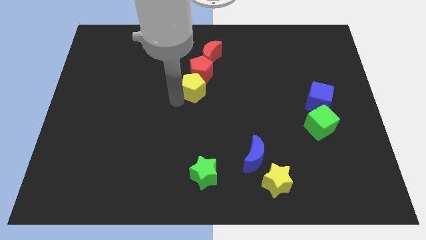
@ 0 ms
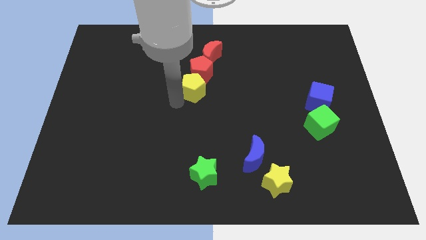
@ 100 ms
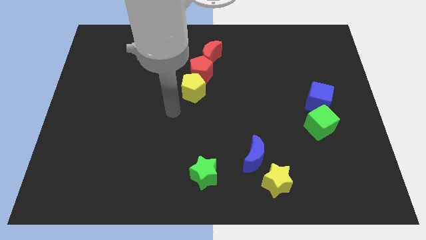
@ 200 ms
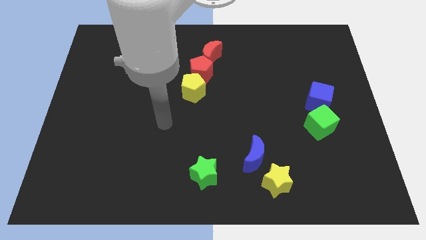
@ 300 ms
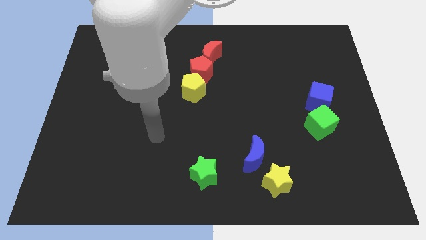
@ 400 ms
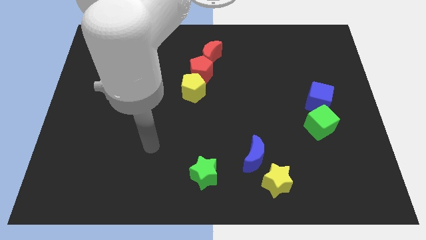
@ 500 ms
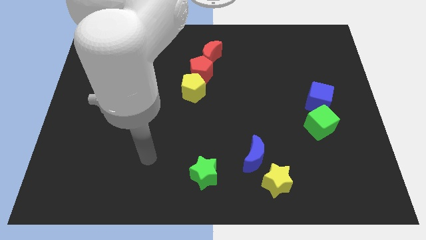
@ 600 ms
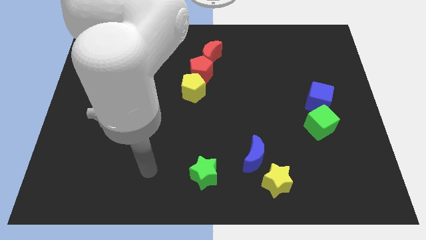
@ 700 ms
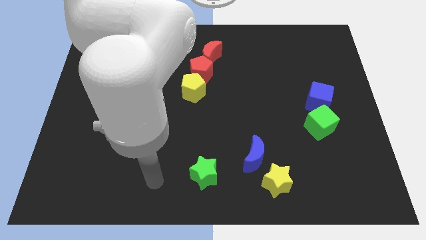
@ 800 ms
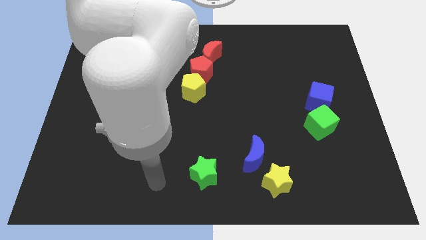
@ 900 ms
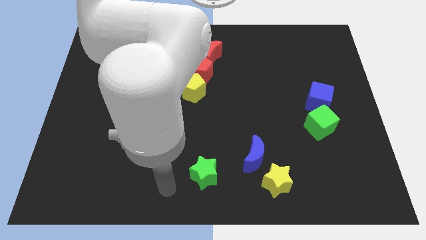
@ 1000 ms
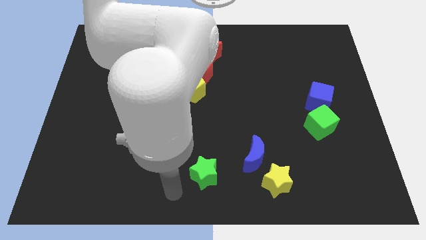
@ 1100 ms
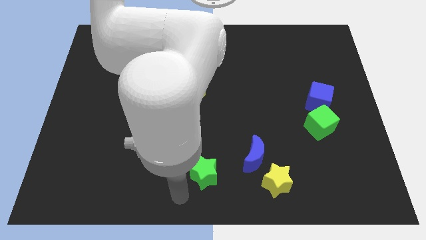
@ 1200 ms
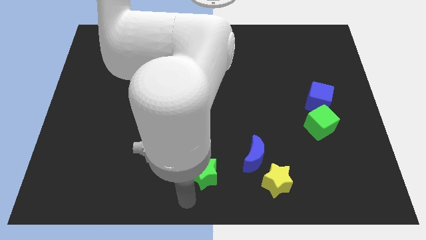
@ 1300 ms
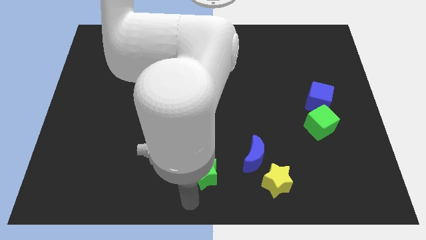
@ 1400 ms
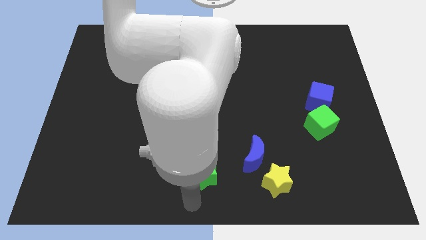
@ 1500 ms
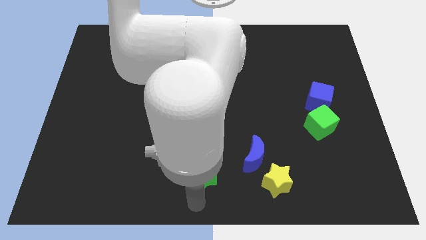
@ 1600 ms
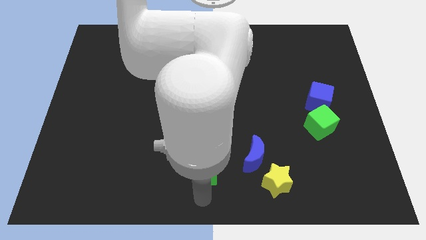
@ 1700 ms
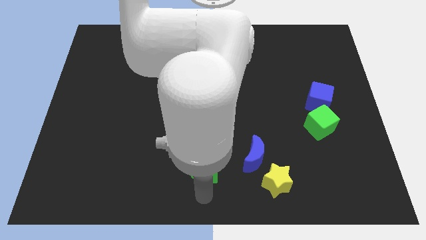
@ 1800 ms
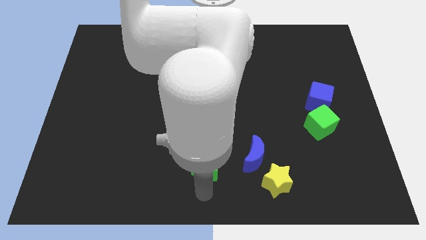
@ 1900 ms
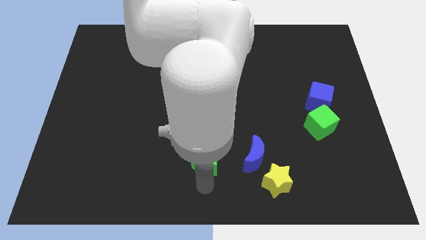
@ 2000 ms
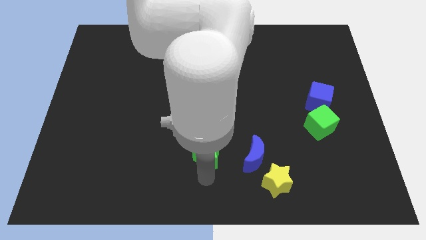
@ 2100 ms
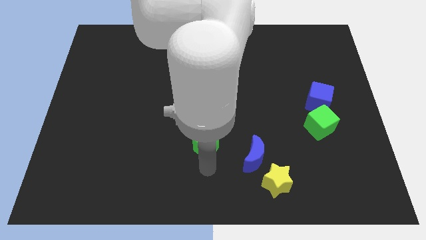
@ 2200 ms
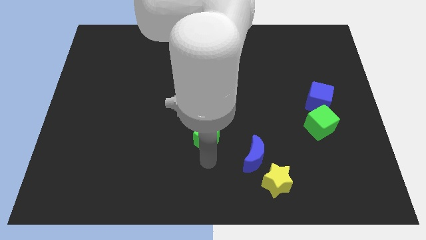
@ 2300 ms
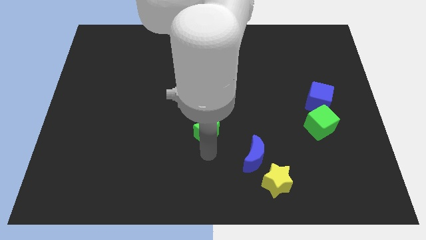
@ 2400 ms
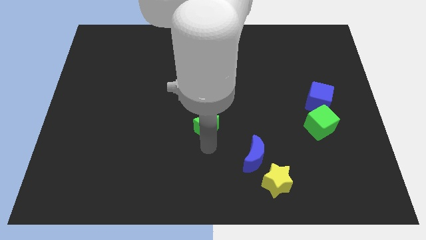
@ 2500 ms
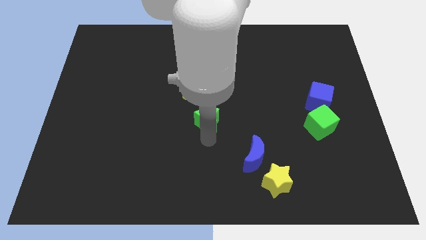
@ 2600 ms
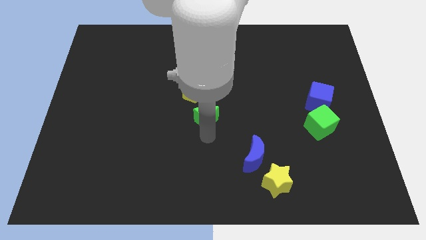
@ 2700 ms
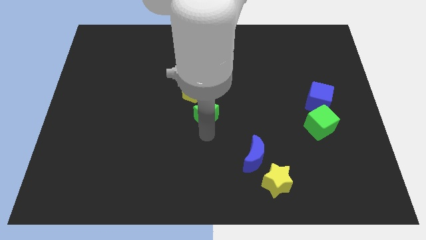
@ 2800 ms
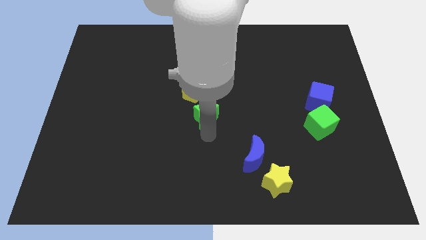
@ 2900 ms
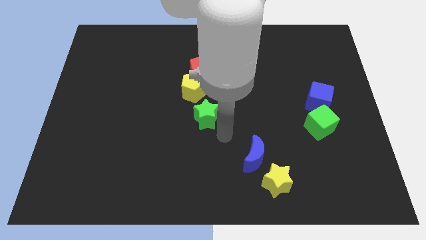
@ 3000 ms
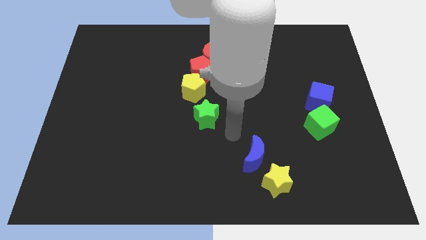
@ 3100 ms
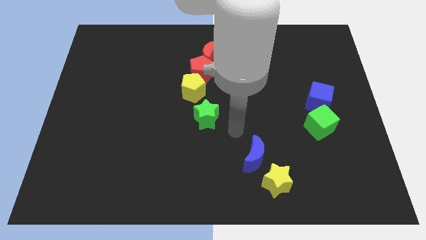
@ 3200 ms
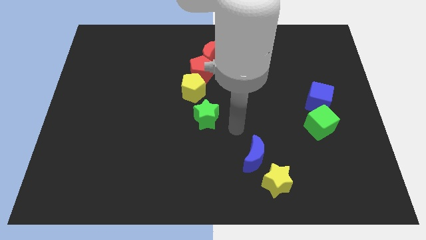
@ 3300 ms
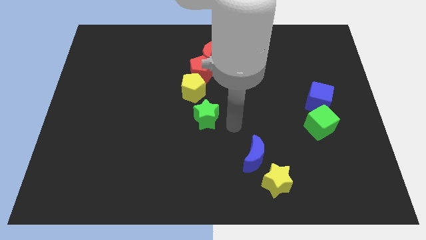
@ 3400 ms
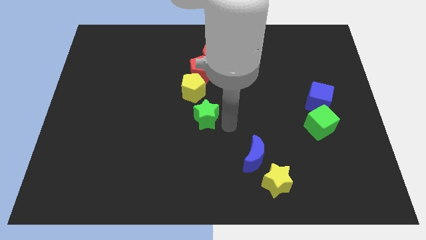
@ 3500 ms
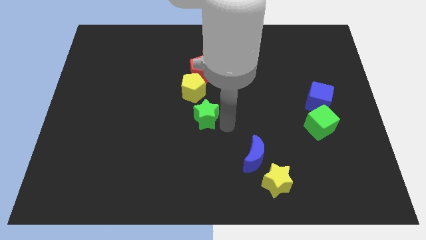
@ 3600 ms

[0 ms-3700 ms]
place the green star left to the green cube

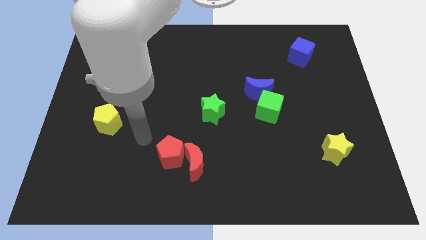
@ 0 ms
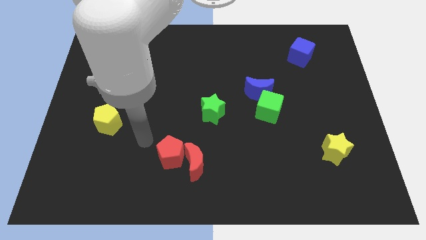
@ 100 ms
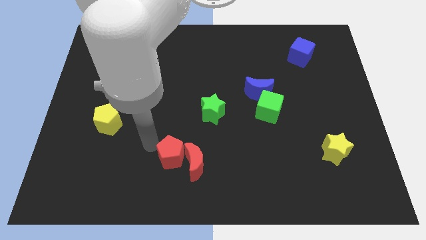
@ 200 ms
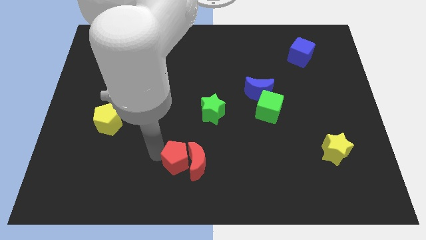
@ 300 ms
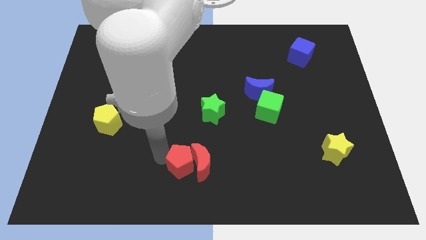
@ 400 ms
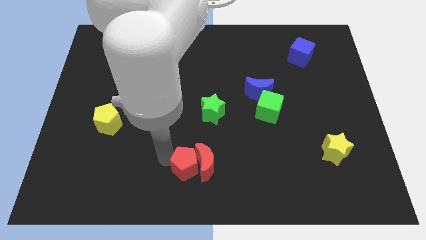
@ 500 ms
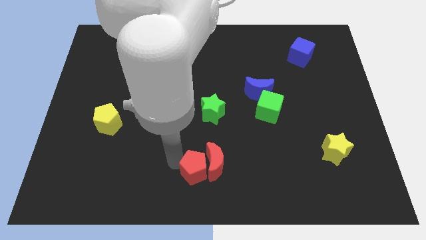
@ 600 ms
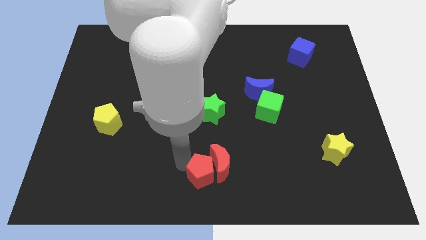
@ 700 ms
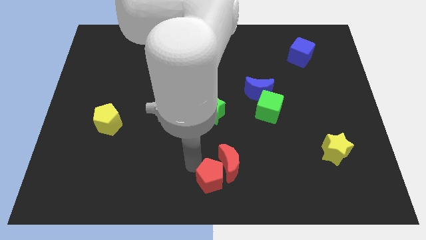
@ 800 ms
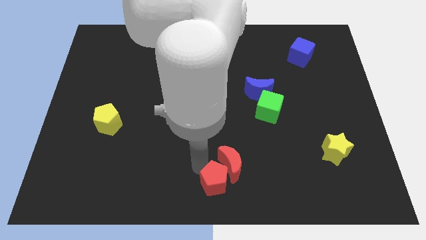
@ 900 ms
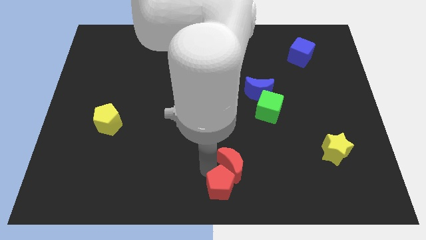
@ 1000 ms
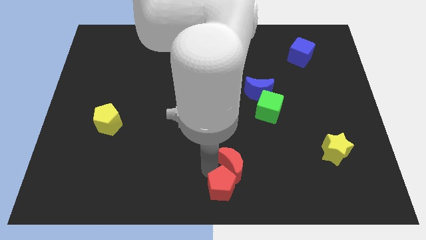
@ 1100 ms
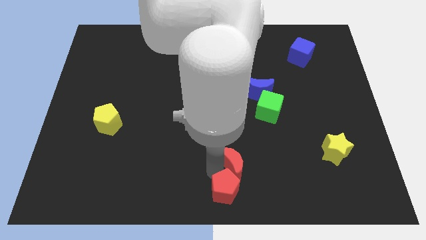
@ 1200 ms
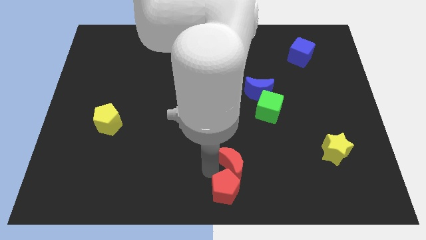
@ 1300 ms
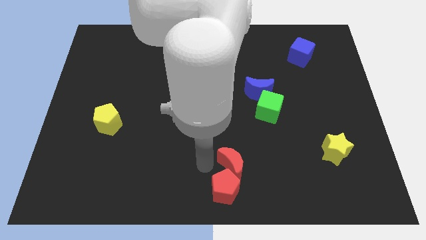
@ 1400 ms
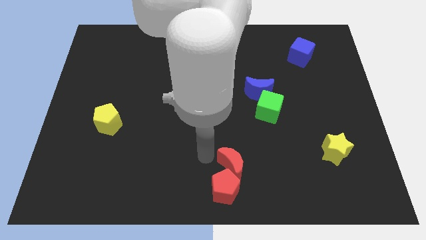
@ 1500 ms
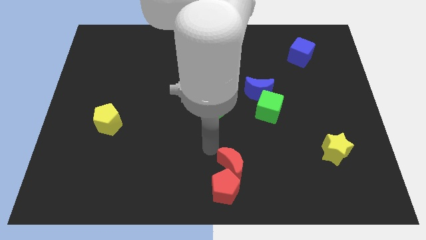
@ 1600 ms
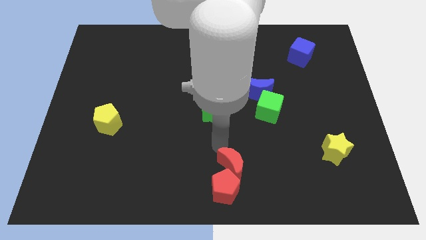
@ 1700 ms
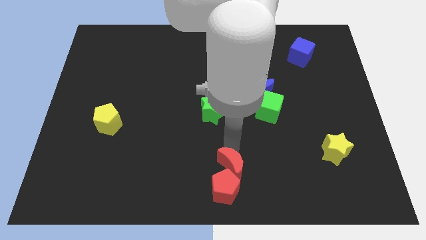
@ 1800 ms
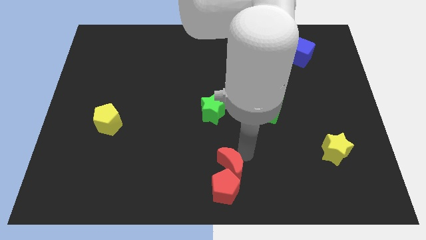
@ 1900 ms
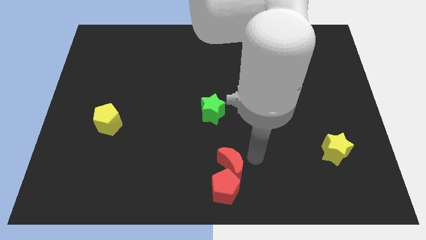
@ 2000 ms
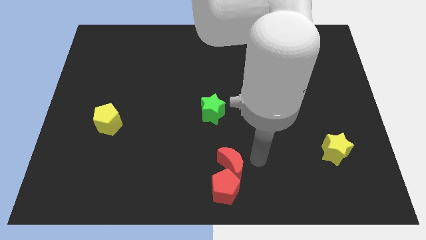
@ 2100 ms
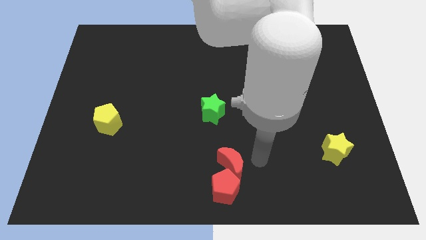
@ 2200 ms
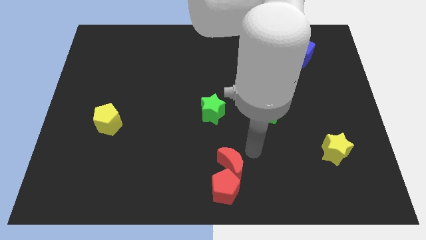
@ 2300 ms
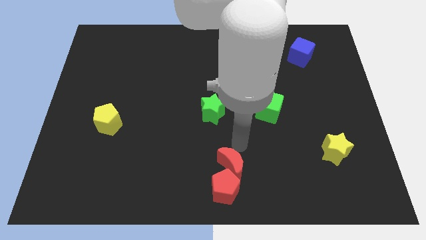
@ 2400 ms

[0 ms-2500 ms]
move the red pentagon to the bottom of the red crescent

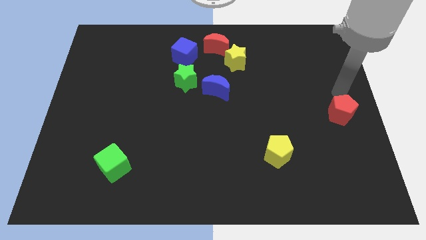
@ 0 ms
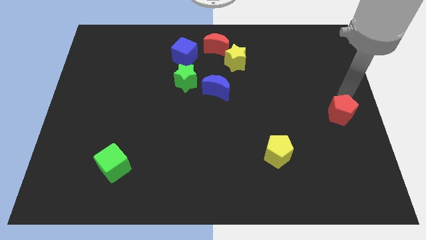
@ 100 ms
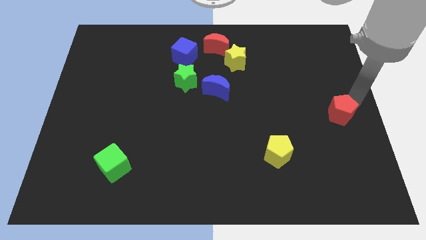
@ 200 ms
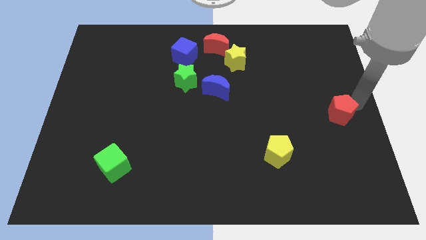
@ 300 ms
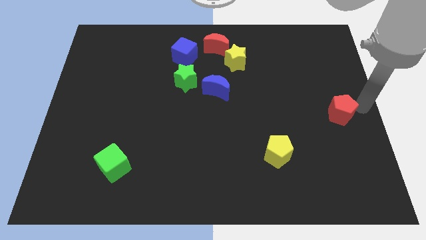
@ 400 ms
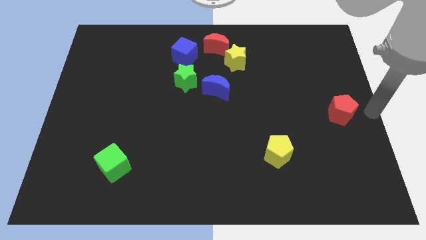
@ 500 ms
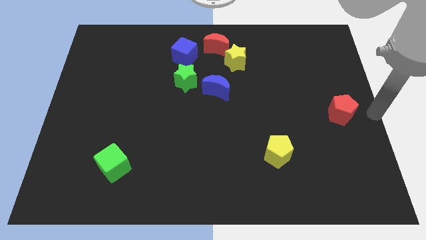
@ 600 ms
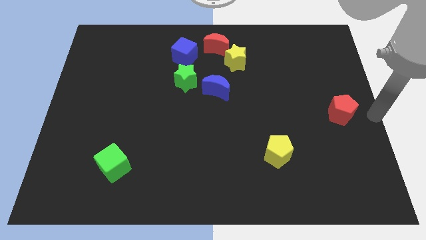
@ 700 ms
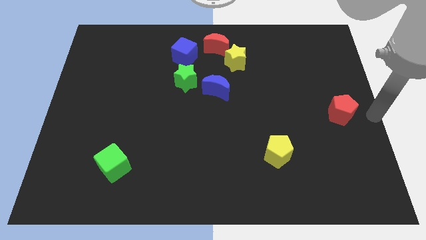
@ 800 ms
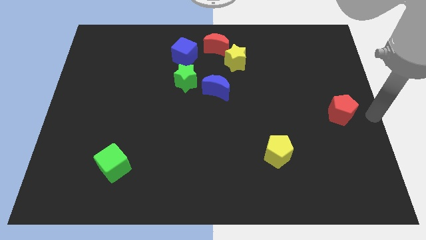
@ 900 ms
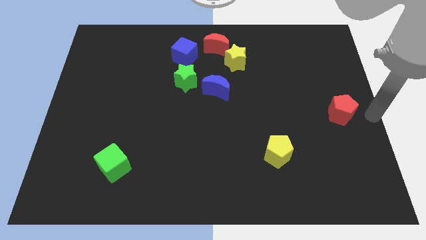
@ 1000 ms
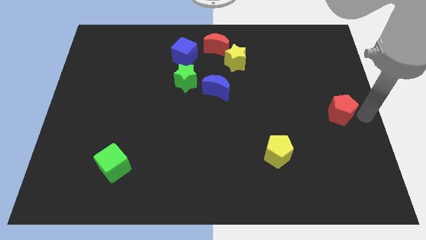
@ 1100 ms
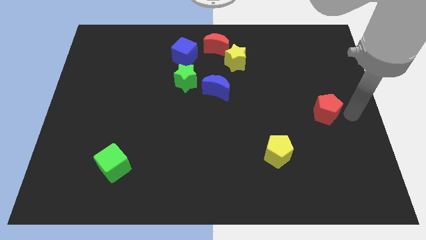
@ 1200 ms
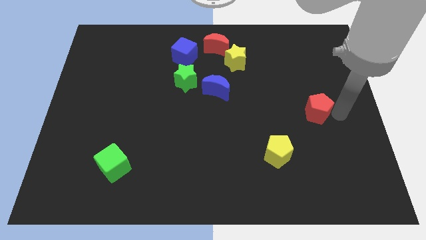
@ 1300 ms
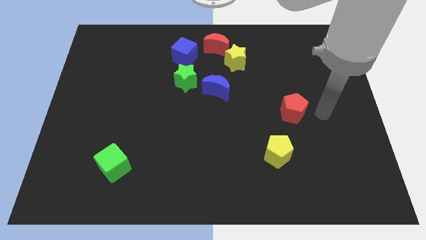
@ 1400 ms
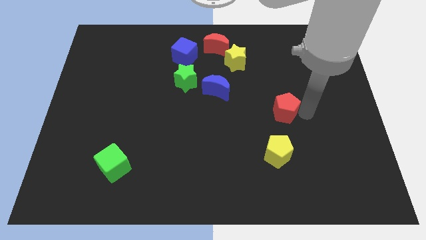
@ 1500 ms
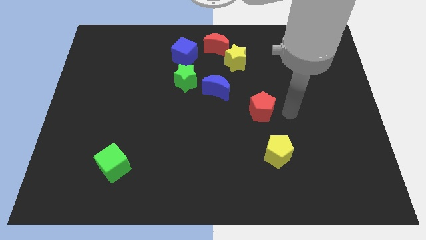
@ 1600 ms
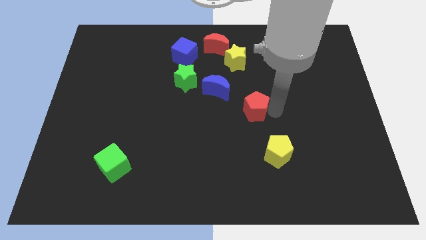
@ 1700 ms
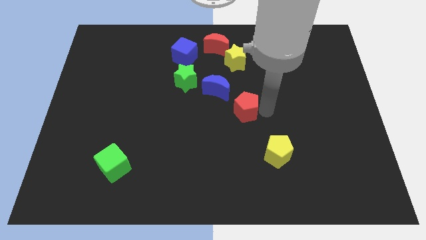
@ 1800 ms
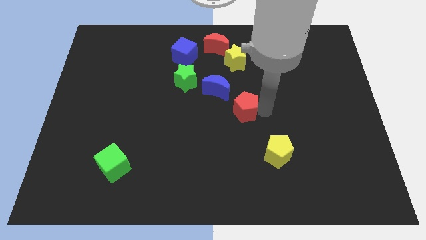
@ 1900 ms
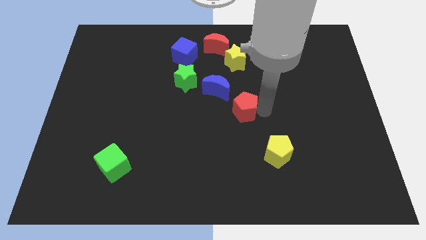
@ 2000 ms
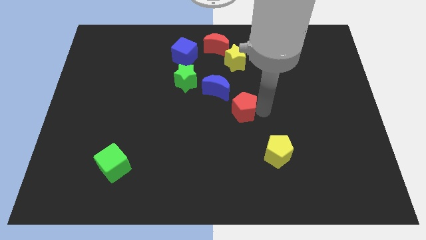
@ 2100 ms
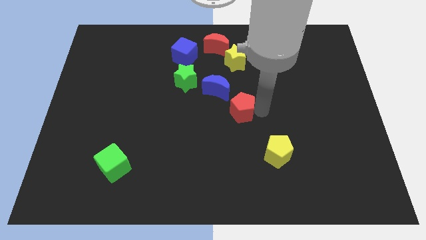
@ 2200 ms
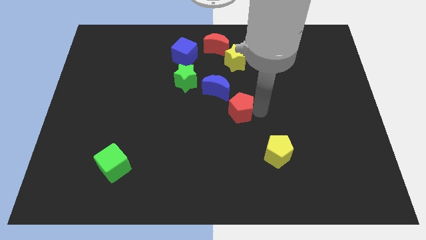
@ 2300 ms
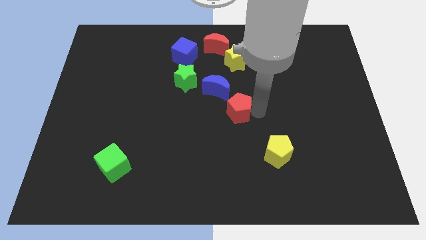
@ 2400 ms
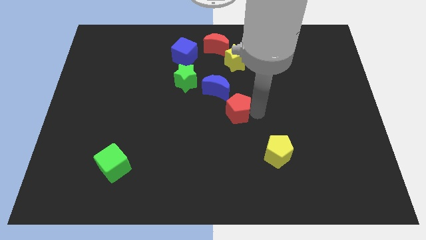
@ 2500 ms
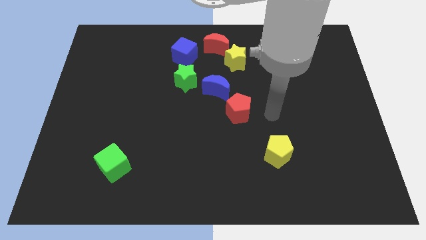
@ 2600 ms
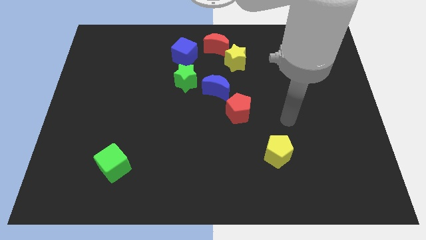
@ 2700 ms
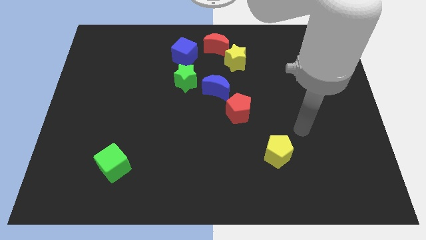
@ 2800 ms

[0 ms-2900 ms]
place red pentagon to the bottom of the blue crescent
